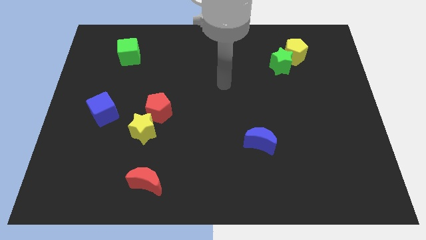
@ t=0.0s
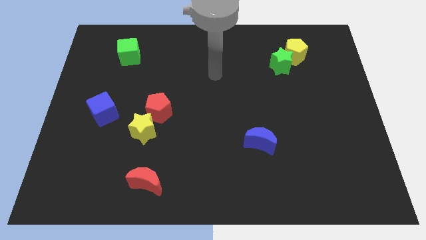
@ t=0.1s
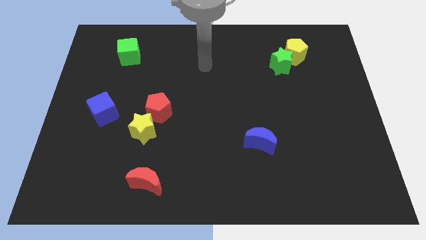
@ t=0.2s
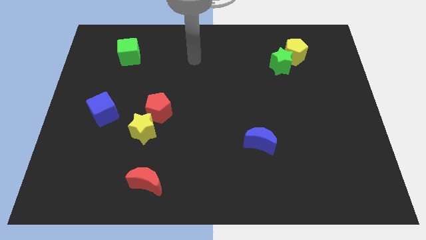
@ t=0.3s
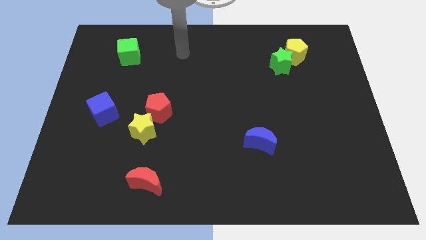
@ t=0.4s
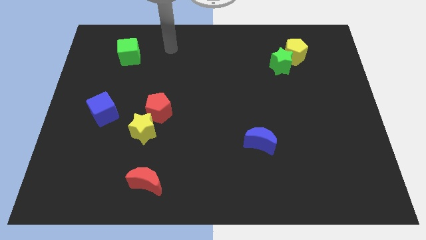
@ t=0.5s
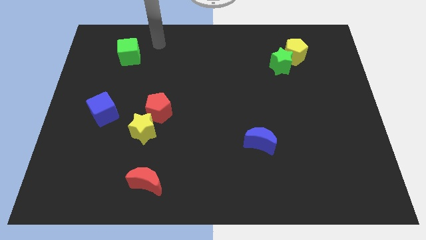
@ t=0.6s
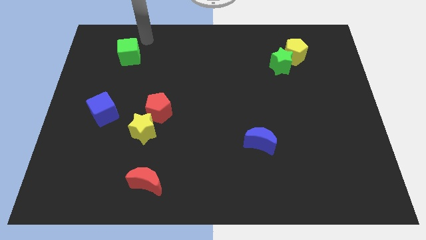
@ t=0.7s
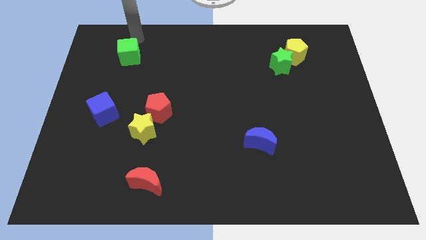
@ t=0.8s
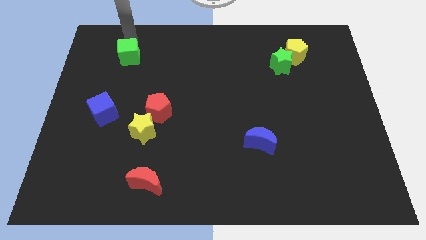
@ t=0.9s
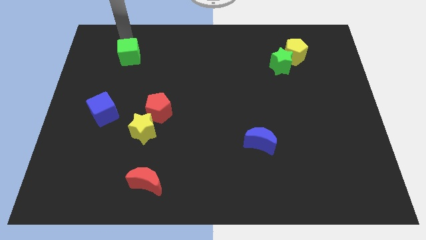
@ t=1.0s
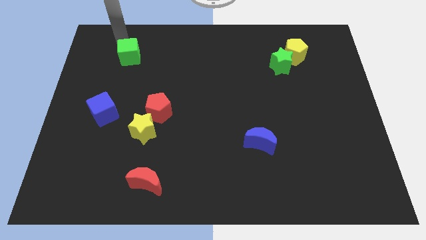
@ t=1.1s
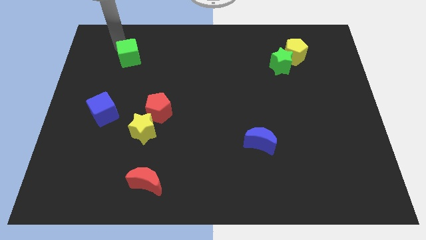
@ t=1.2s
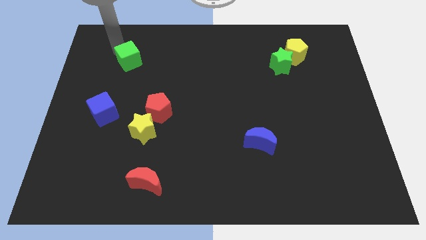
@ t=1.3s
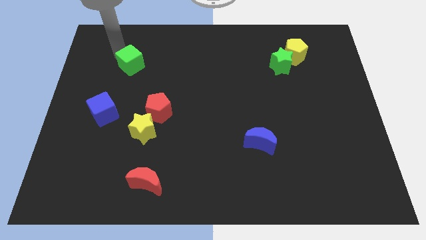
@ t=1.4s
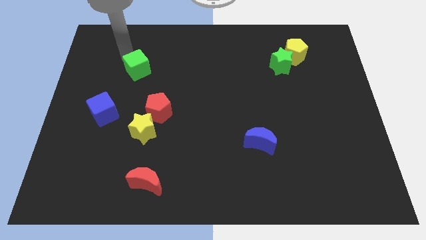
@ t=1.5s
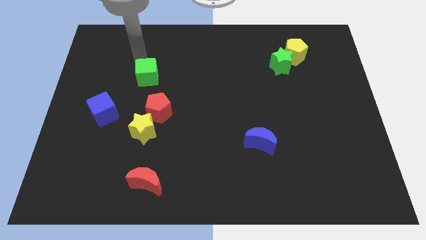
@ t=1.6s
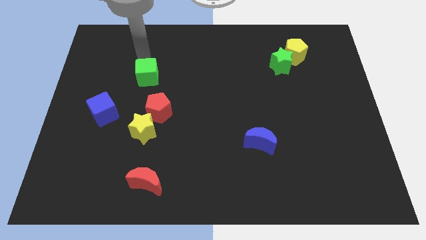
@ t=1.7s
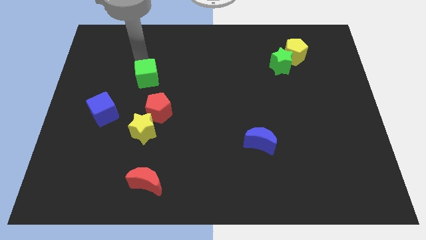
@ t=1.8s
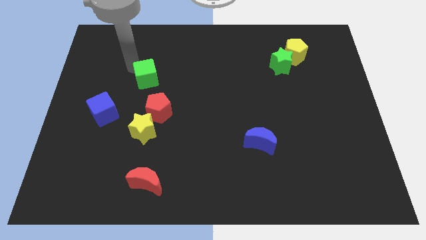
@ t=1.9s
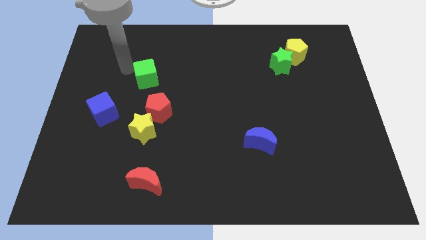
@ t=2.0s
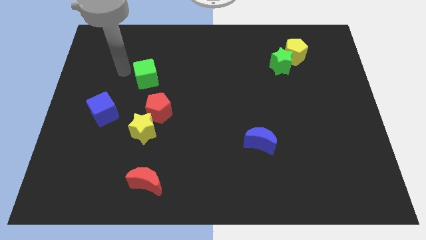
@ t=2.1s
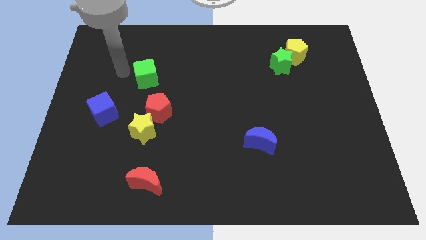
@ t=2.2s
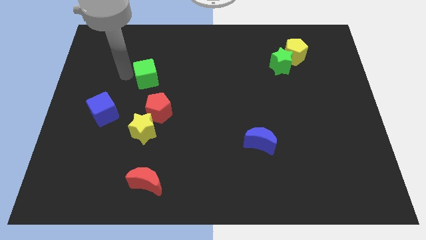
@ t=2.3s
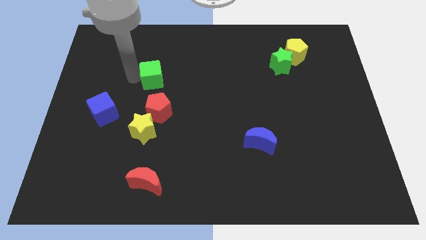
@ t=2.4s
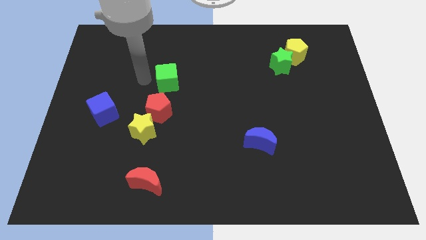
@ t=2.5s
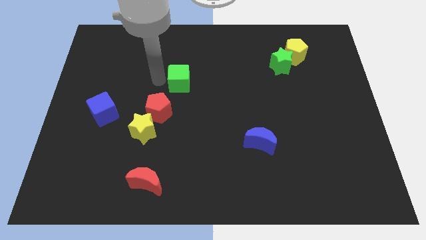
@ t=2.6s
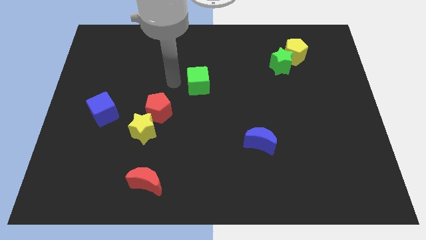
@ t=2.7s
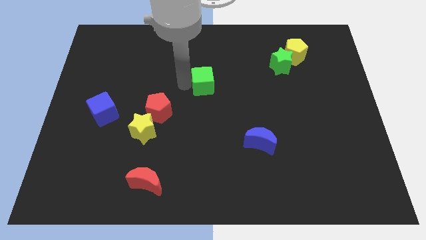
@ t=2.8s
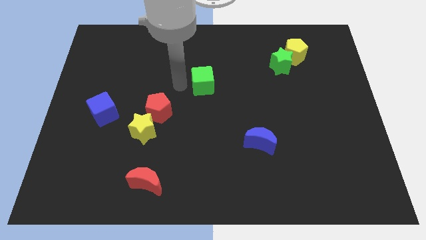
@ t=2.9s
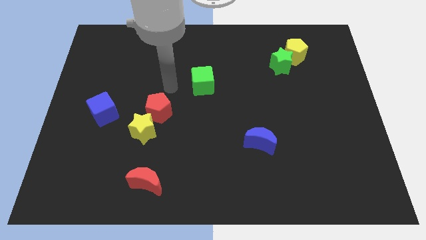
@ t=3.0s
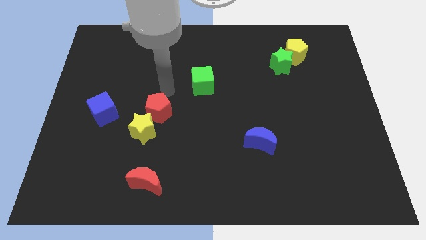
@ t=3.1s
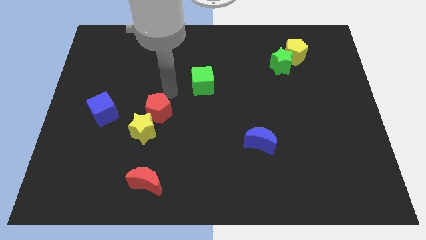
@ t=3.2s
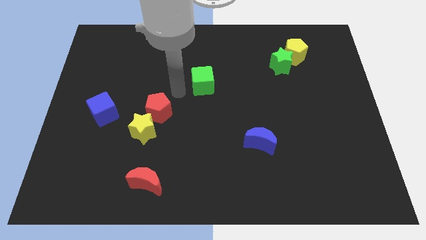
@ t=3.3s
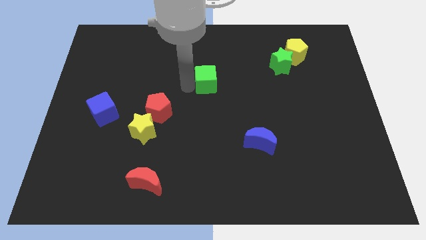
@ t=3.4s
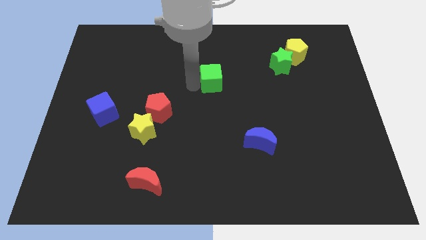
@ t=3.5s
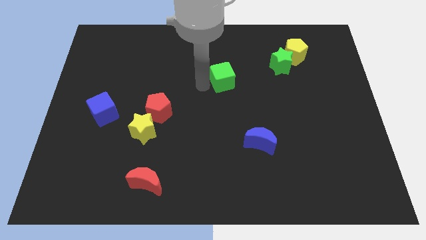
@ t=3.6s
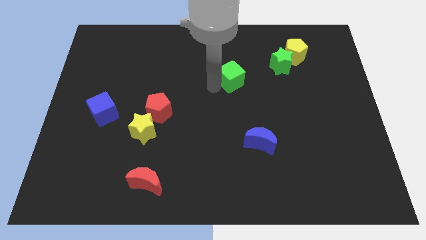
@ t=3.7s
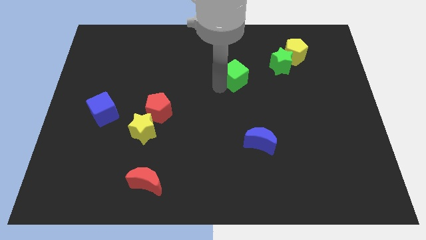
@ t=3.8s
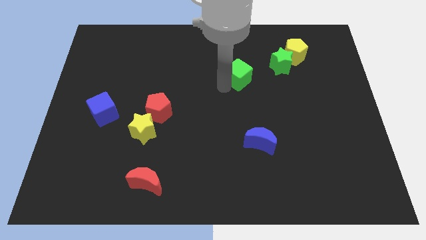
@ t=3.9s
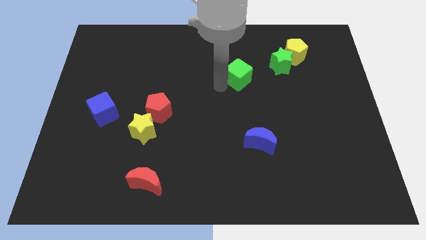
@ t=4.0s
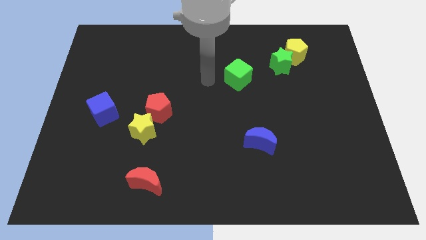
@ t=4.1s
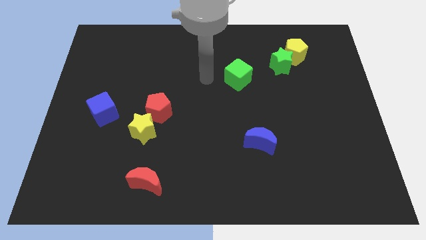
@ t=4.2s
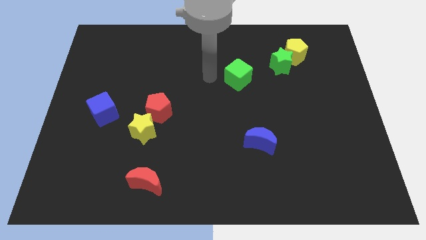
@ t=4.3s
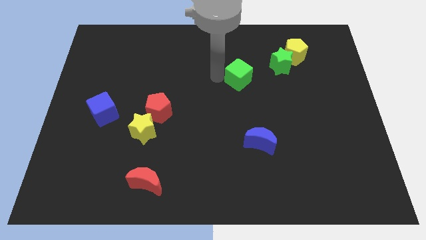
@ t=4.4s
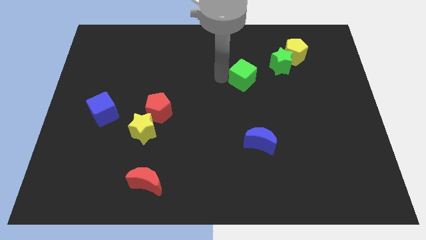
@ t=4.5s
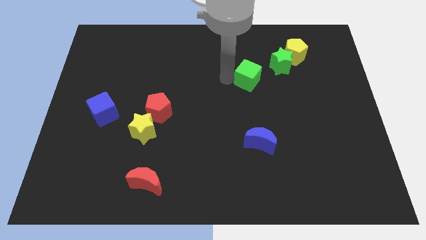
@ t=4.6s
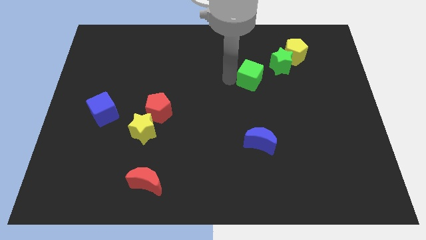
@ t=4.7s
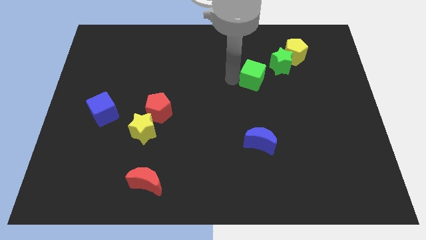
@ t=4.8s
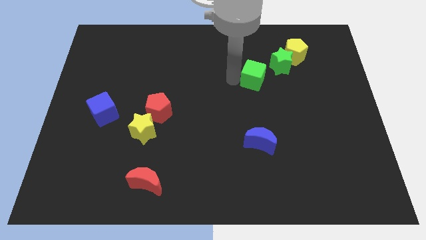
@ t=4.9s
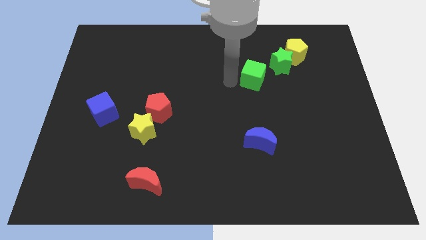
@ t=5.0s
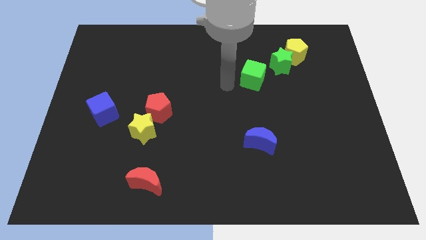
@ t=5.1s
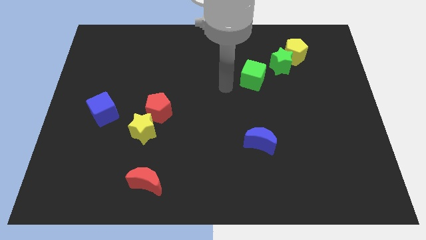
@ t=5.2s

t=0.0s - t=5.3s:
push the green cube towards the right side of the board

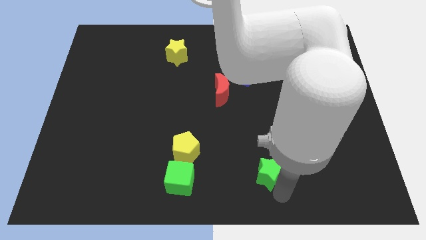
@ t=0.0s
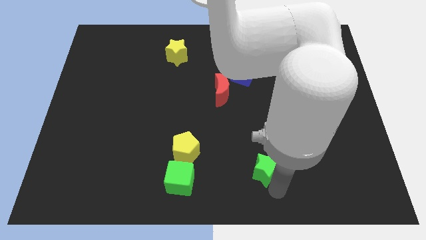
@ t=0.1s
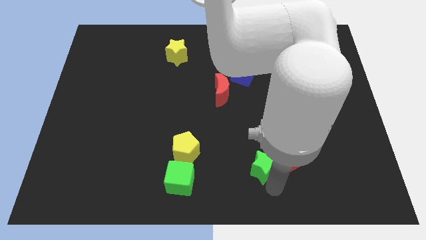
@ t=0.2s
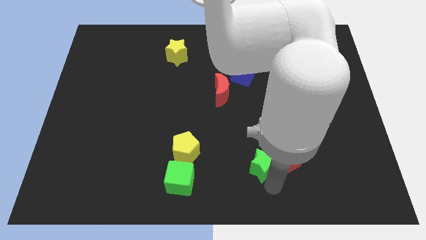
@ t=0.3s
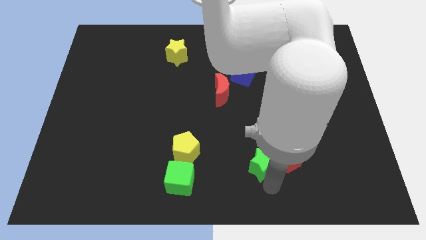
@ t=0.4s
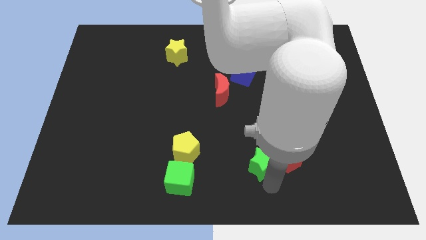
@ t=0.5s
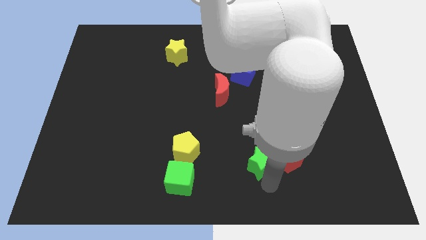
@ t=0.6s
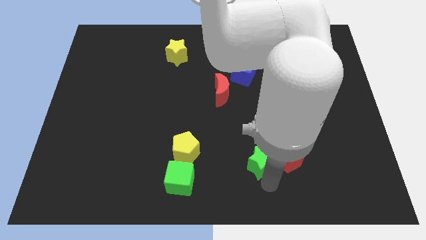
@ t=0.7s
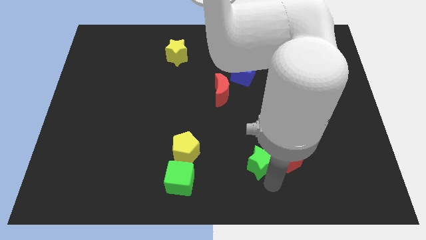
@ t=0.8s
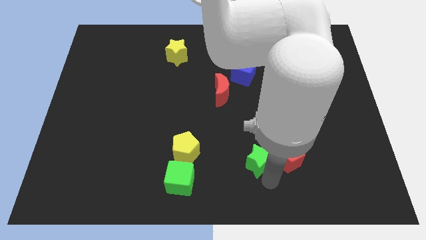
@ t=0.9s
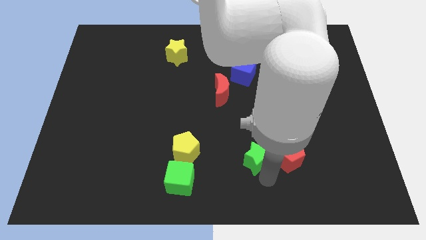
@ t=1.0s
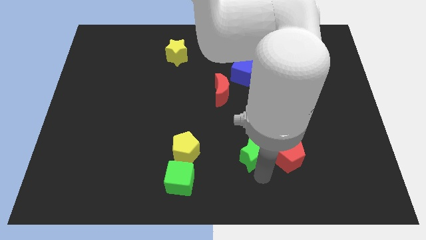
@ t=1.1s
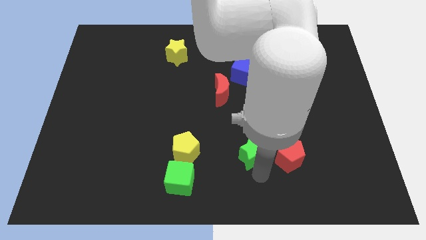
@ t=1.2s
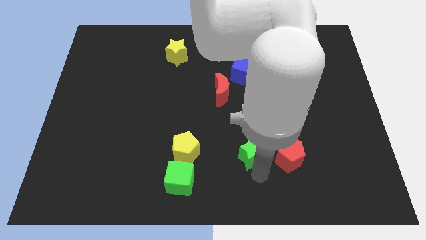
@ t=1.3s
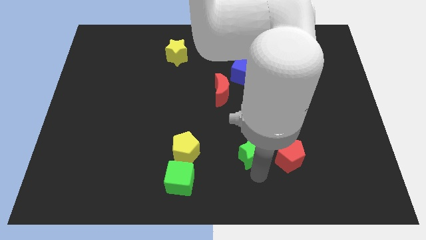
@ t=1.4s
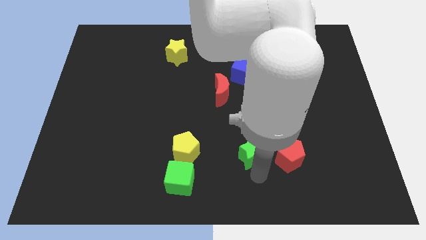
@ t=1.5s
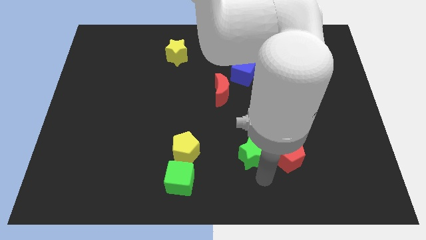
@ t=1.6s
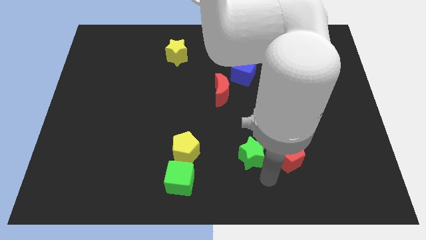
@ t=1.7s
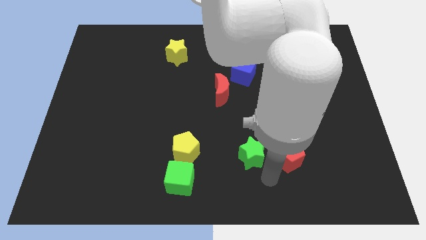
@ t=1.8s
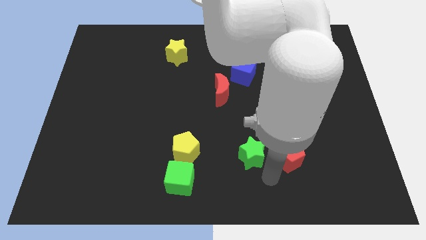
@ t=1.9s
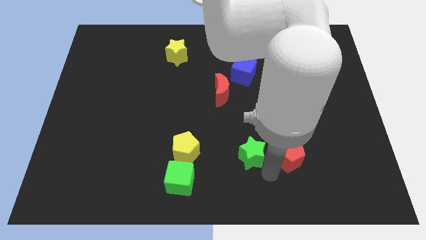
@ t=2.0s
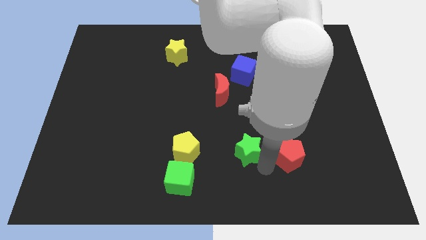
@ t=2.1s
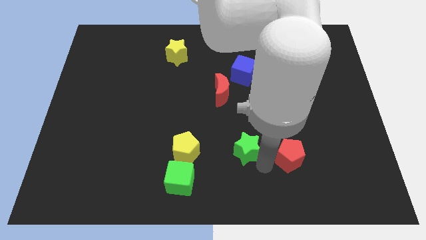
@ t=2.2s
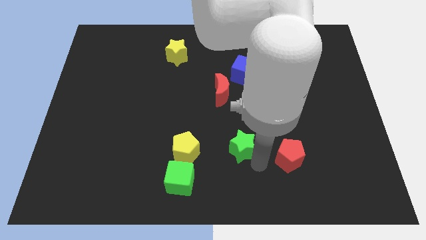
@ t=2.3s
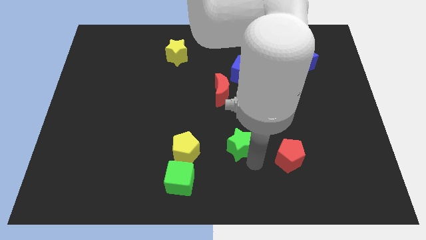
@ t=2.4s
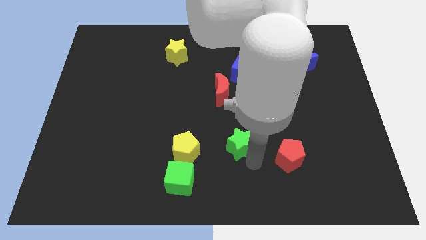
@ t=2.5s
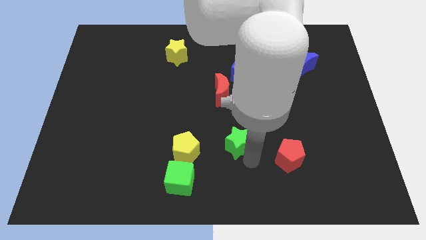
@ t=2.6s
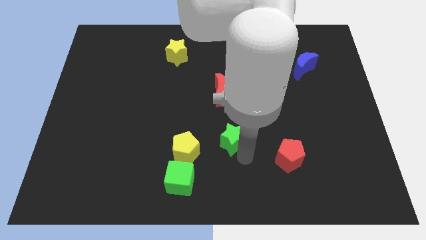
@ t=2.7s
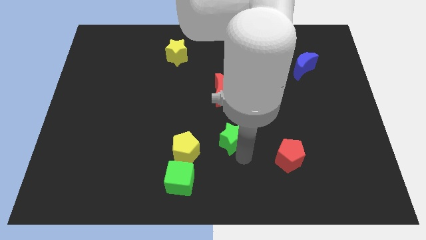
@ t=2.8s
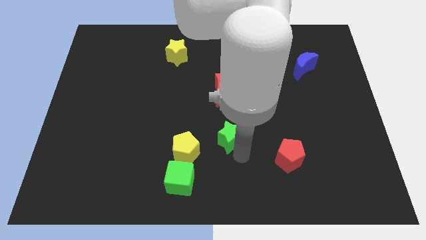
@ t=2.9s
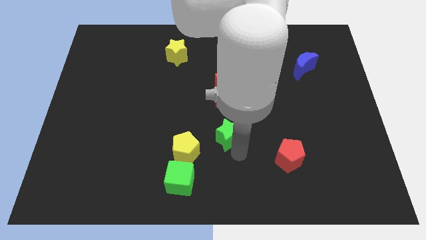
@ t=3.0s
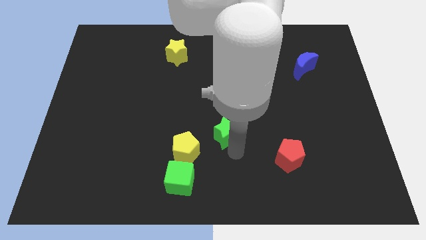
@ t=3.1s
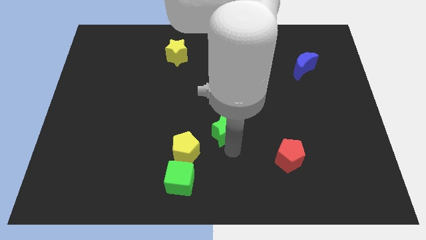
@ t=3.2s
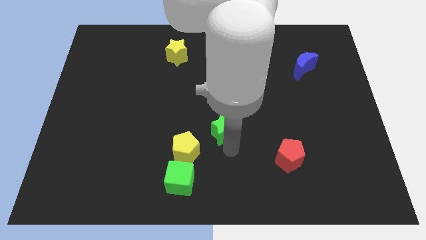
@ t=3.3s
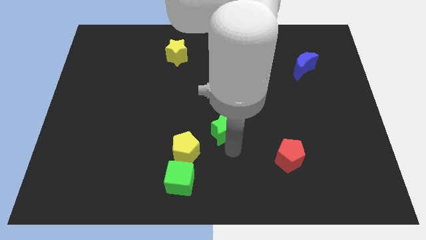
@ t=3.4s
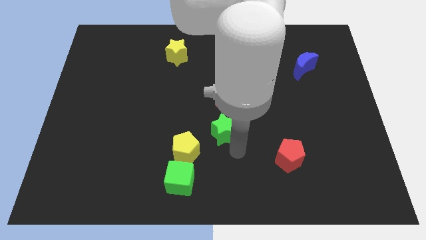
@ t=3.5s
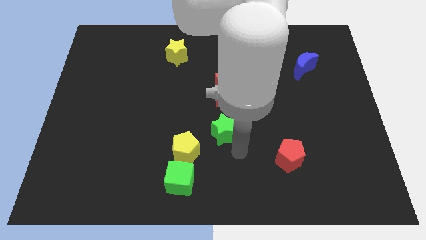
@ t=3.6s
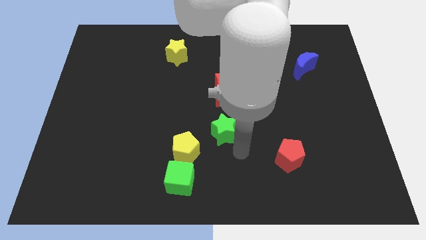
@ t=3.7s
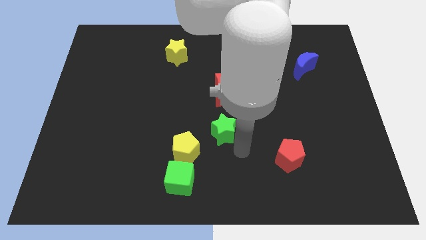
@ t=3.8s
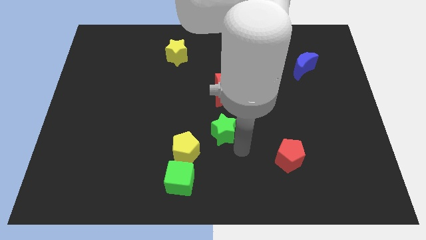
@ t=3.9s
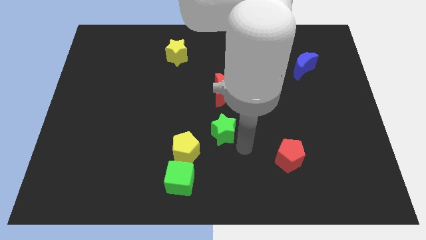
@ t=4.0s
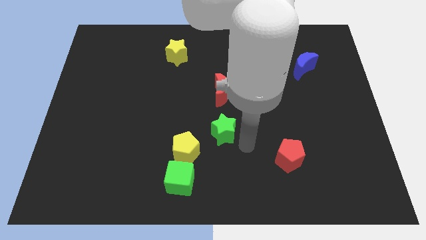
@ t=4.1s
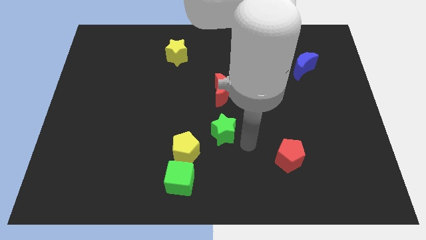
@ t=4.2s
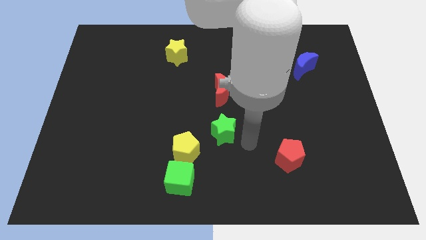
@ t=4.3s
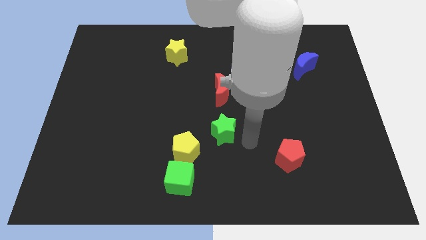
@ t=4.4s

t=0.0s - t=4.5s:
move the green star to the bottom of the red crescent
